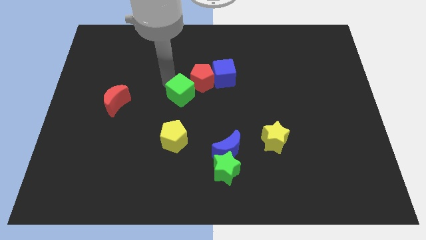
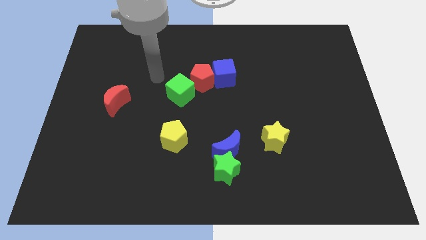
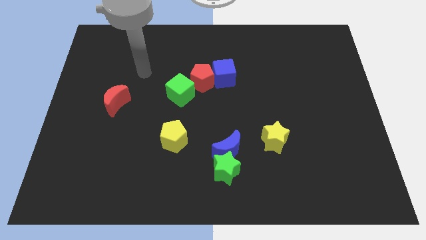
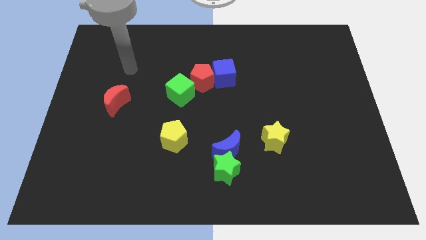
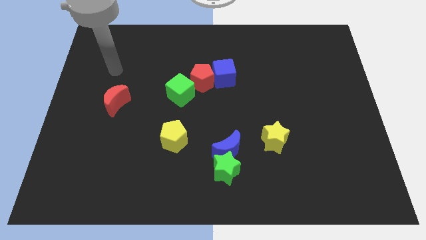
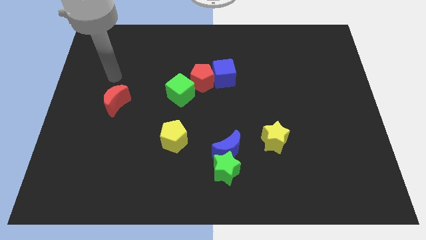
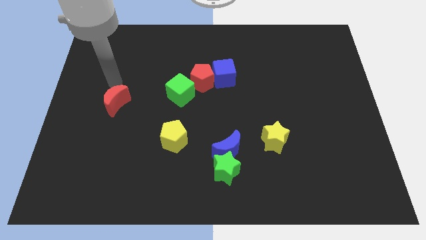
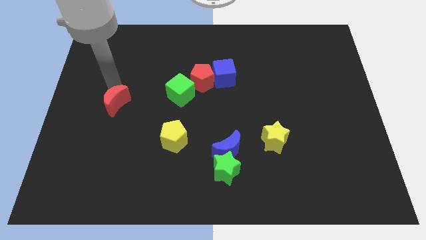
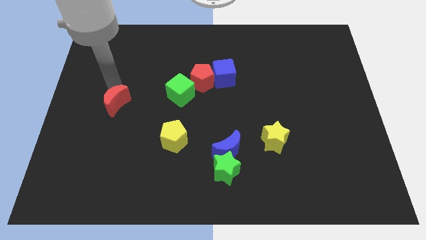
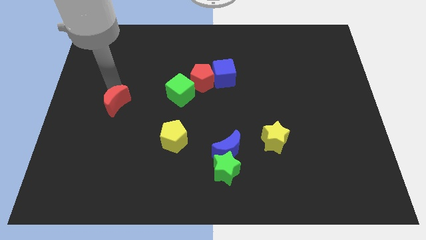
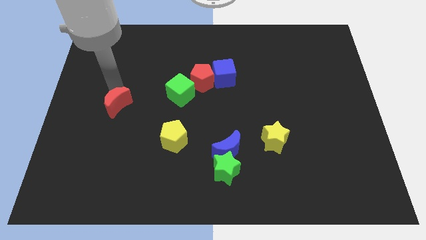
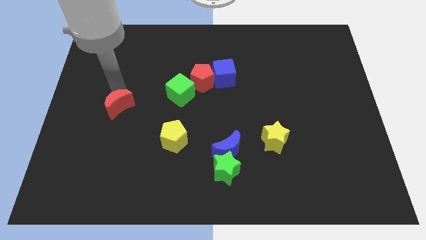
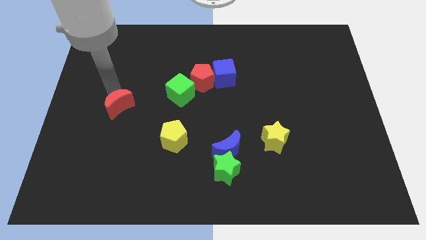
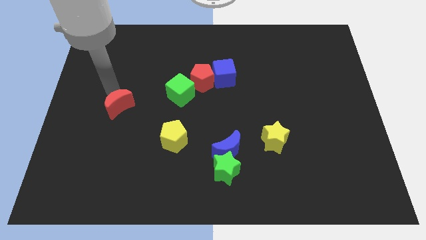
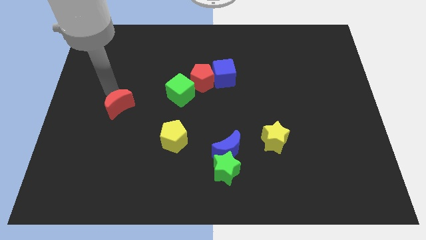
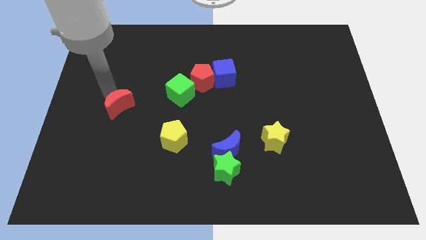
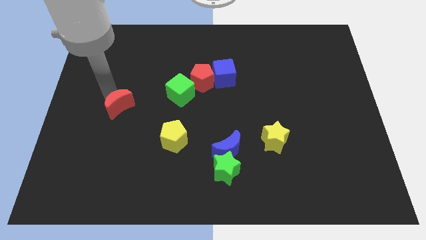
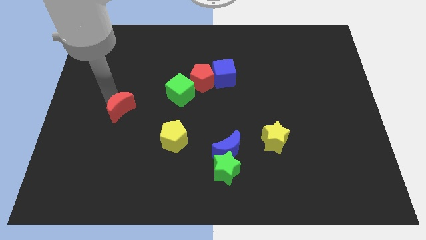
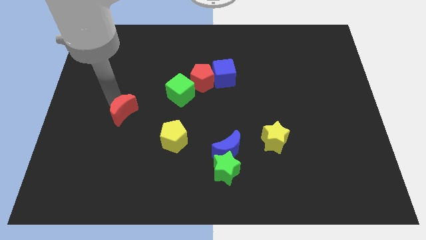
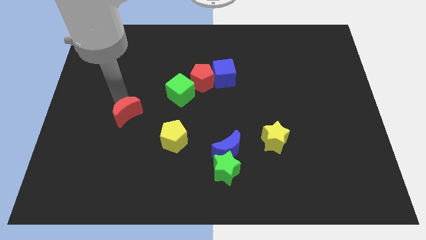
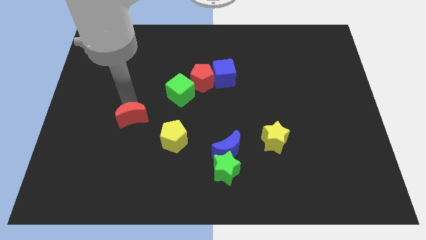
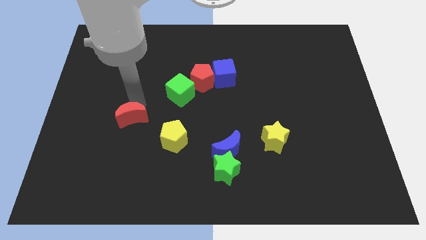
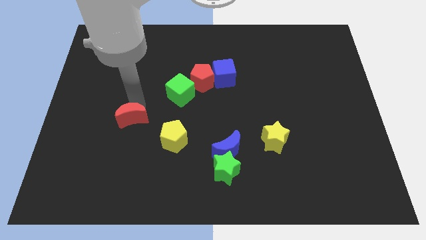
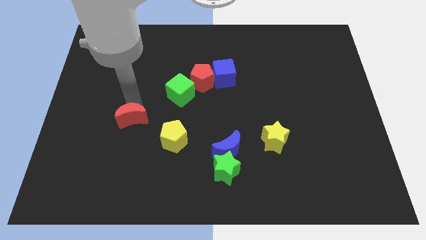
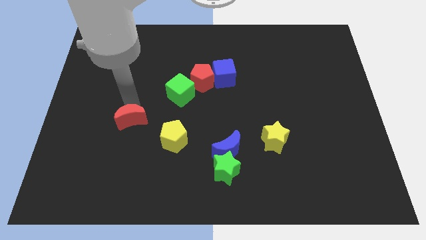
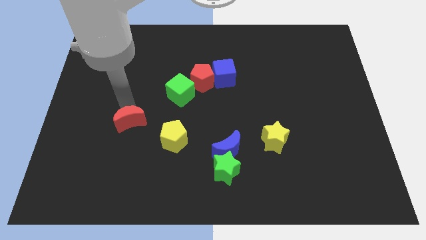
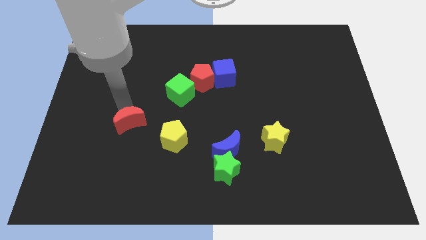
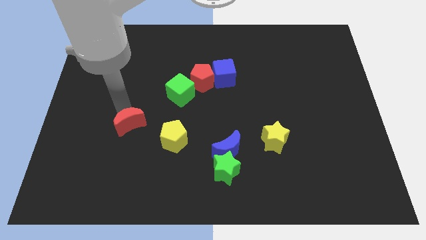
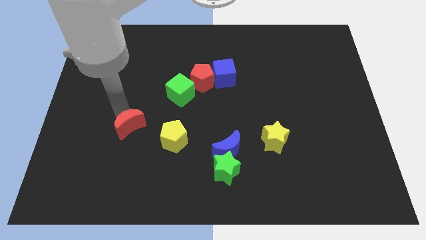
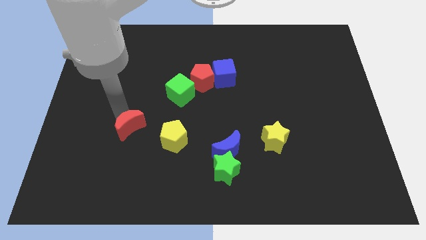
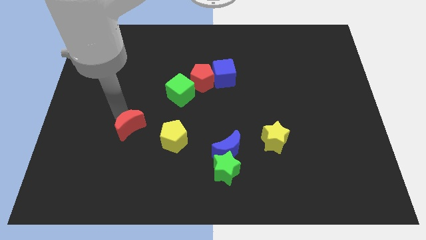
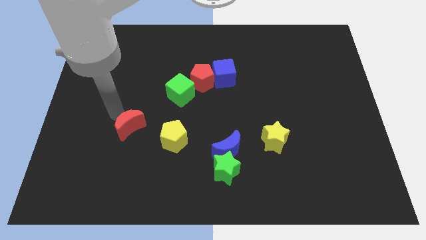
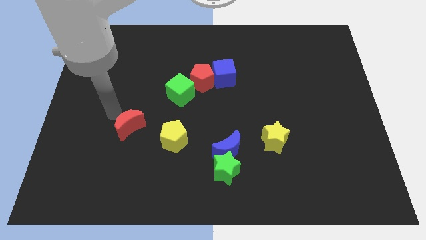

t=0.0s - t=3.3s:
push the red moon downward

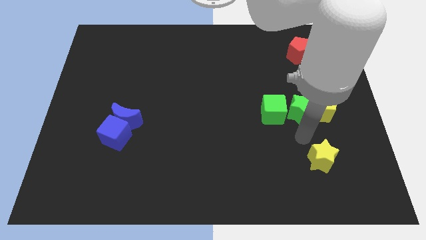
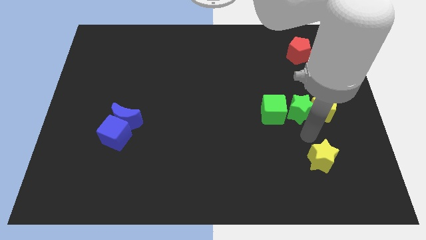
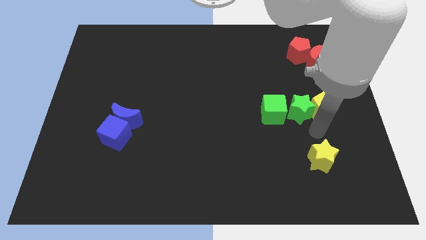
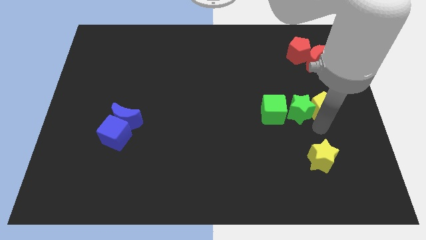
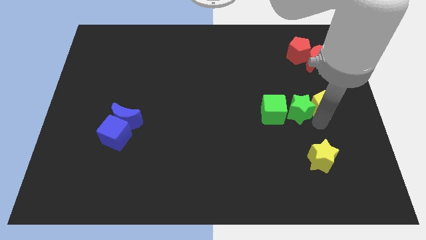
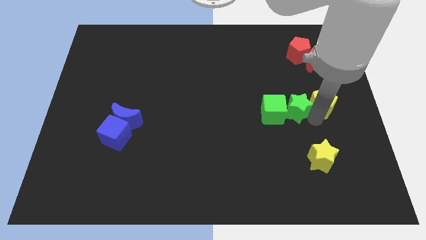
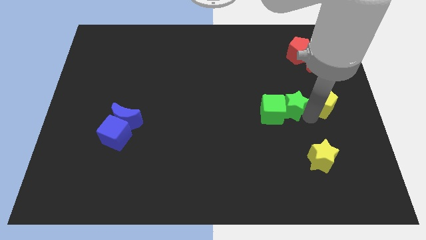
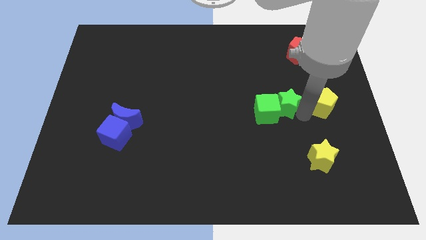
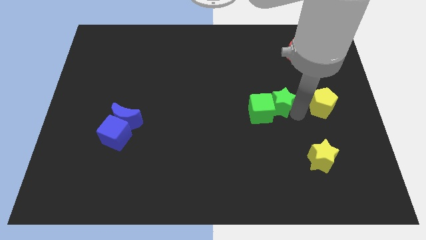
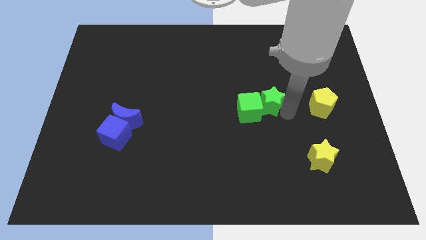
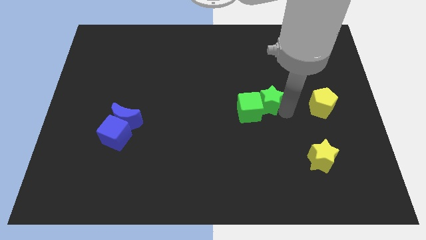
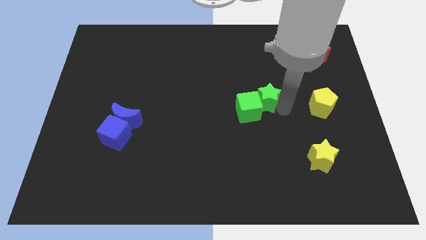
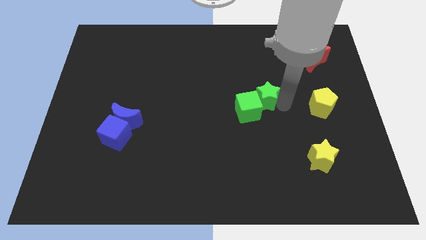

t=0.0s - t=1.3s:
move the green star away from the yellow pentagon

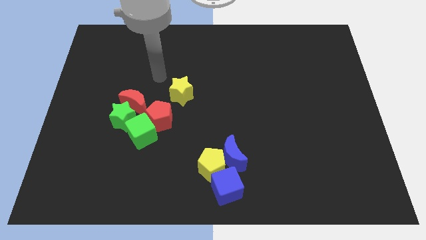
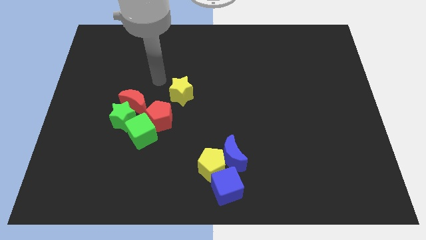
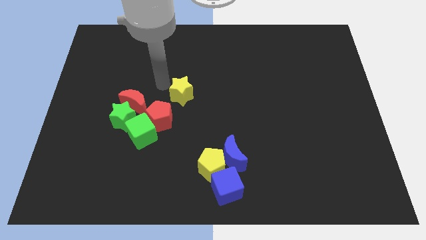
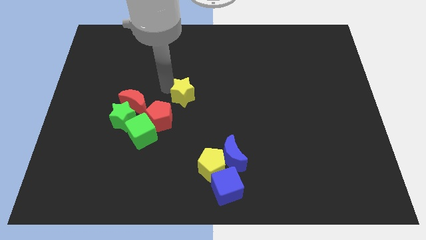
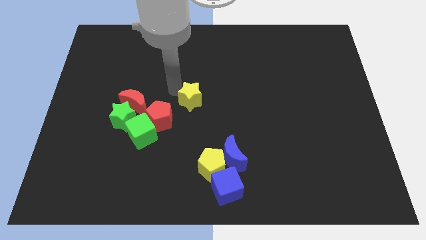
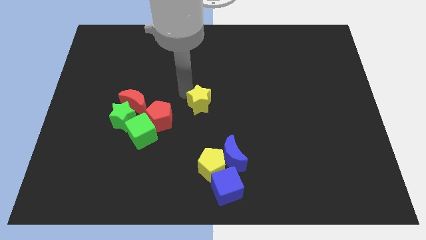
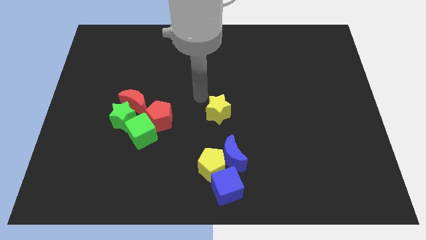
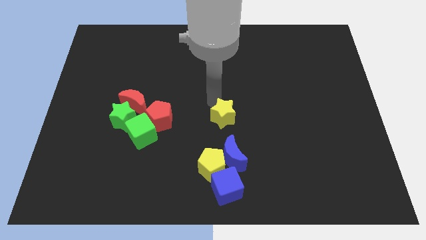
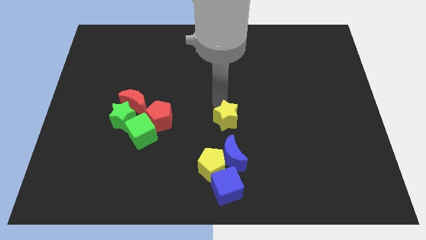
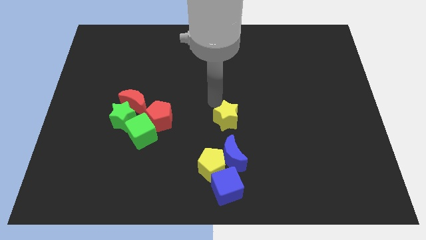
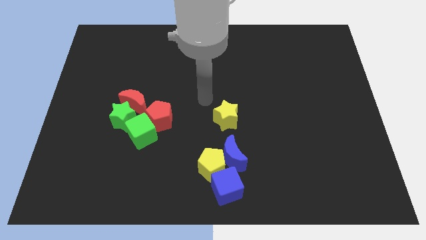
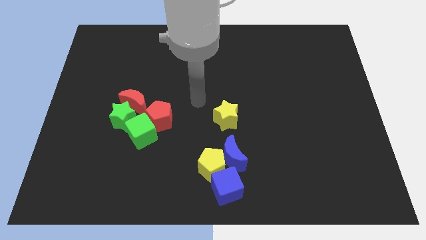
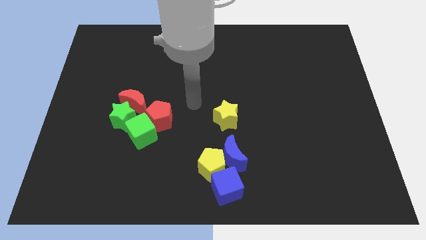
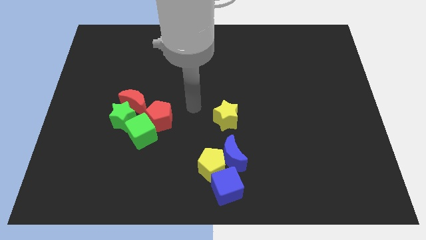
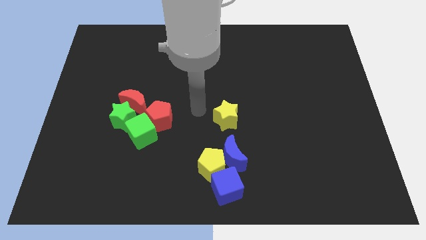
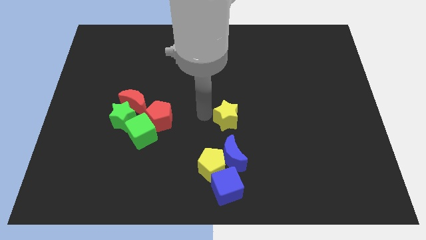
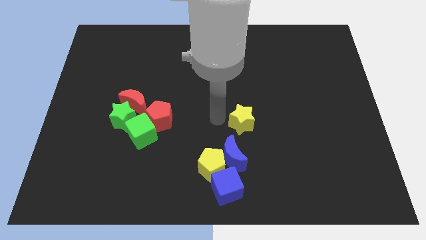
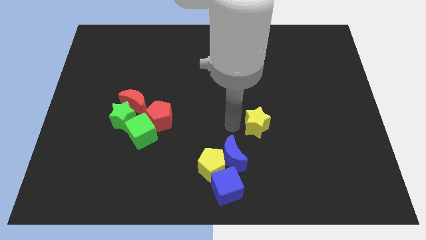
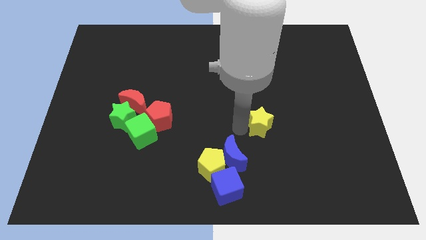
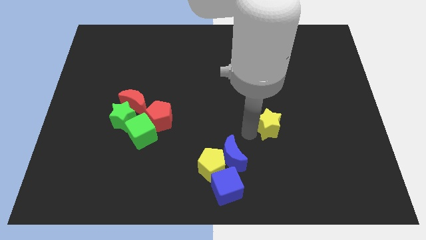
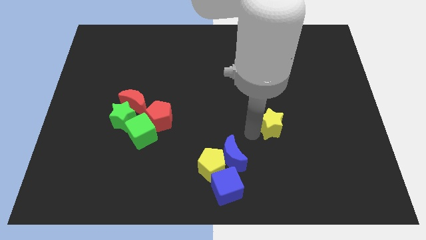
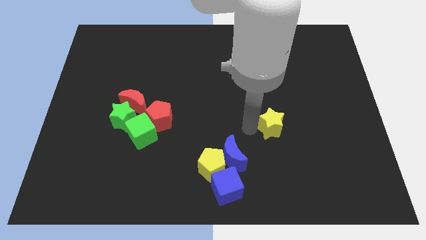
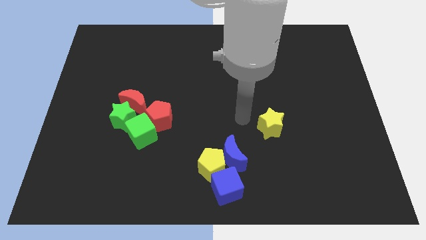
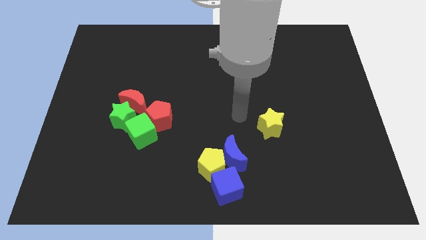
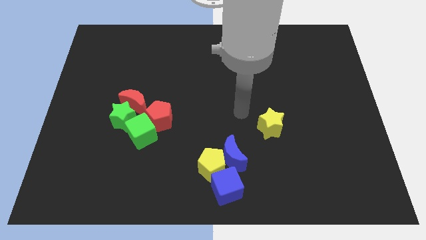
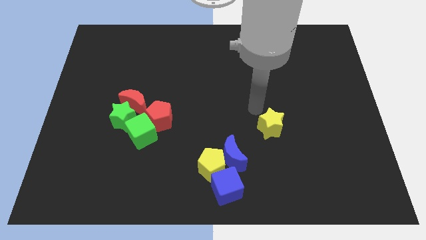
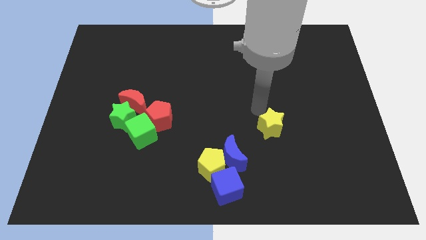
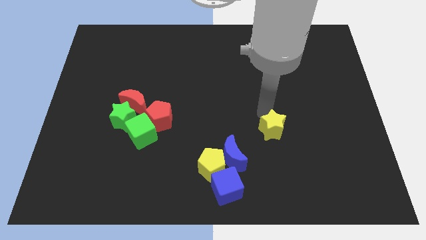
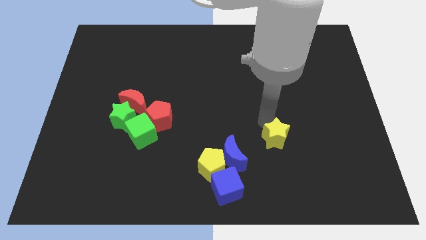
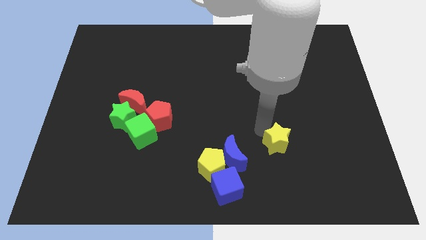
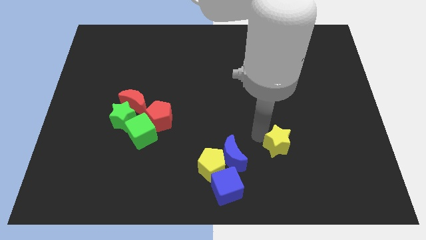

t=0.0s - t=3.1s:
slide the yellow star diagonally on the top right side of the blue cube

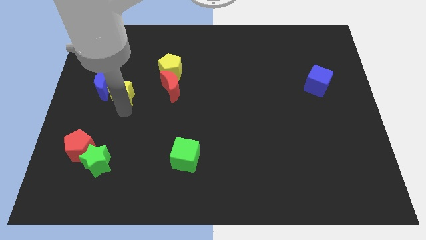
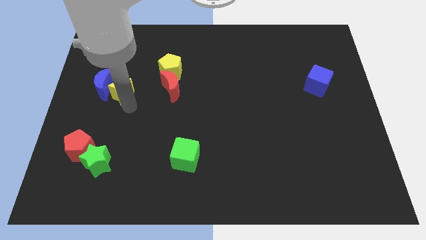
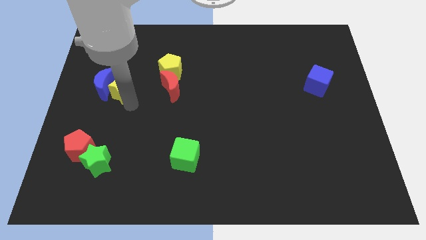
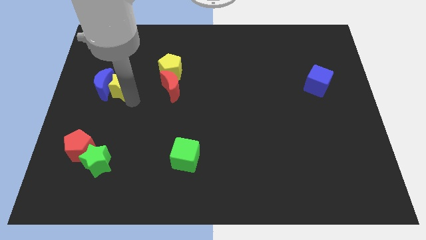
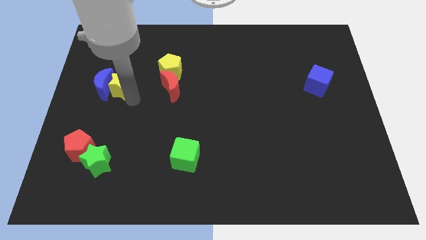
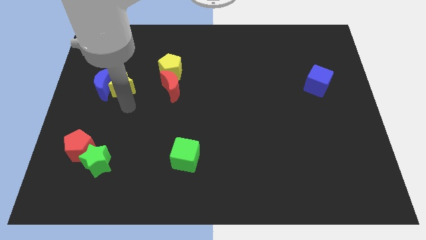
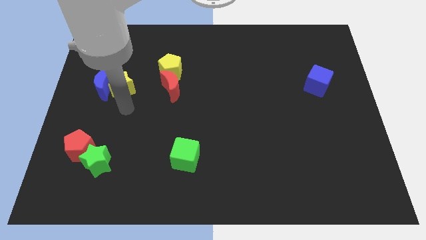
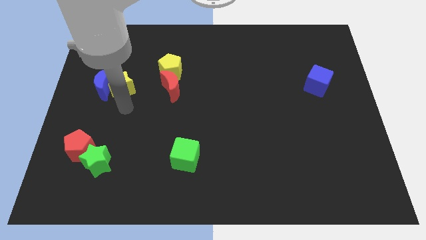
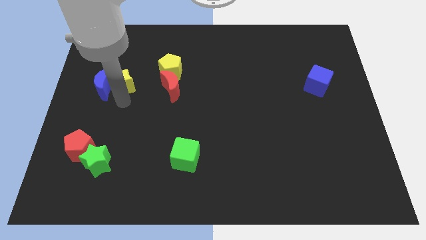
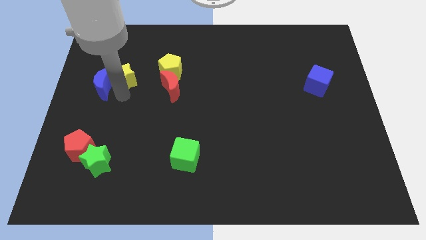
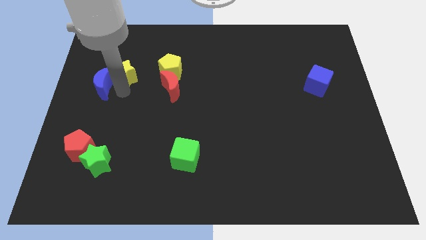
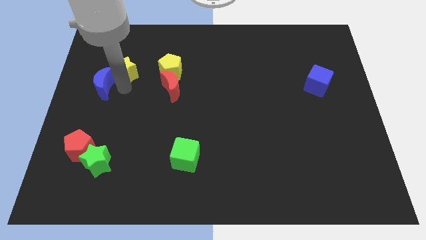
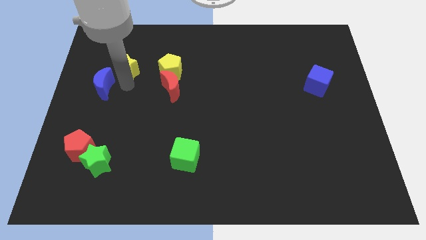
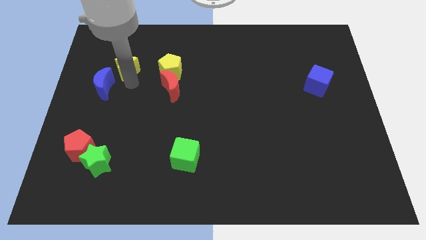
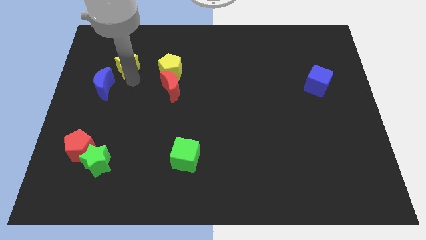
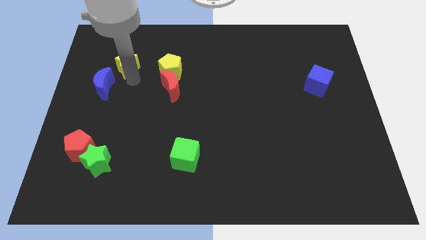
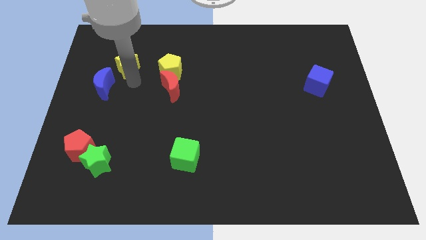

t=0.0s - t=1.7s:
move yellow star to the left of yellow pentagon
